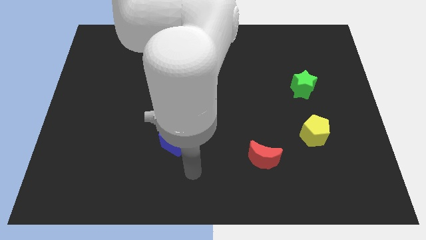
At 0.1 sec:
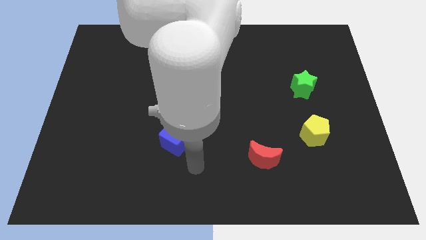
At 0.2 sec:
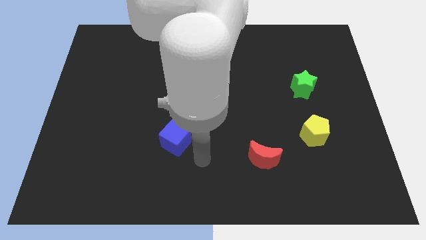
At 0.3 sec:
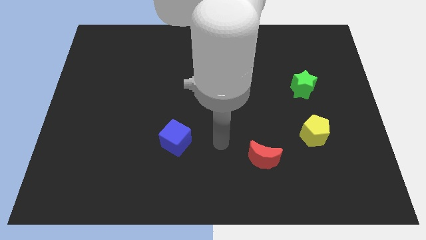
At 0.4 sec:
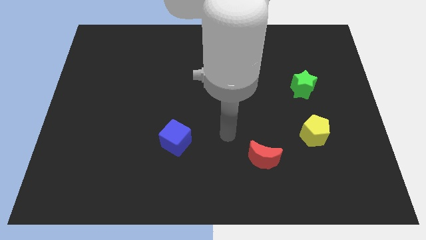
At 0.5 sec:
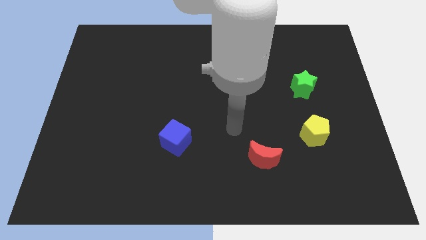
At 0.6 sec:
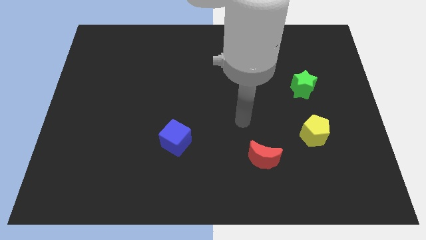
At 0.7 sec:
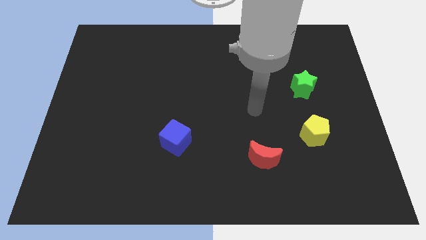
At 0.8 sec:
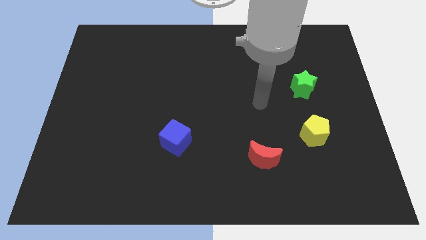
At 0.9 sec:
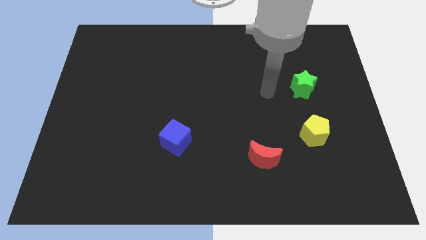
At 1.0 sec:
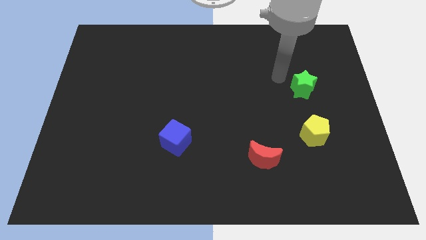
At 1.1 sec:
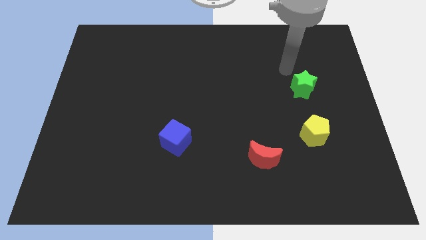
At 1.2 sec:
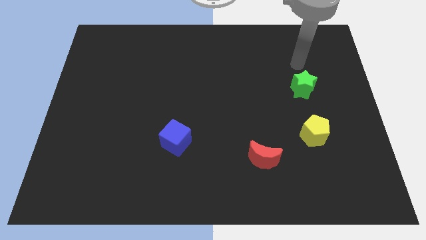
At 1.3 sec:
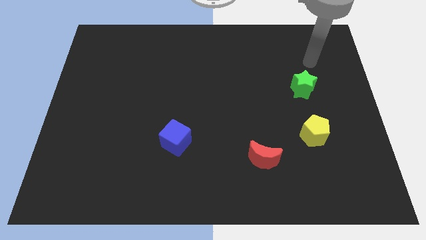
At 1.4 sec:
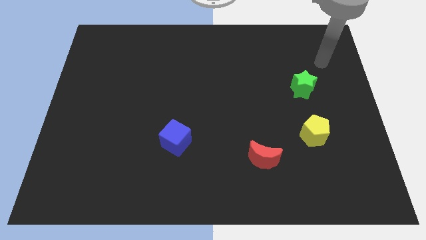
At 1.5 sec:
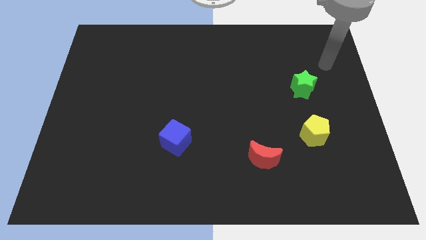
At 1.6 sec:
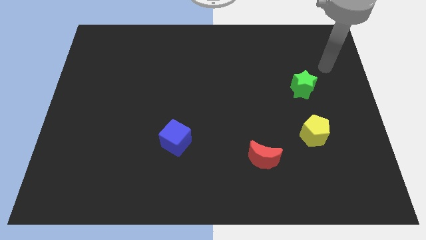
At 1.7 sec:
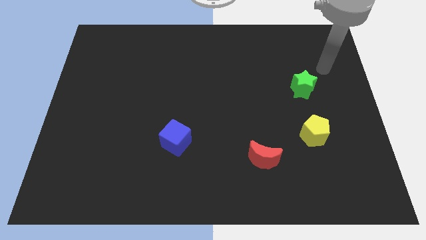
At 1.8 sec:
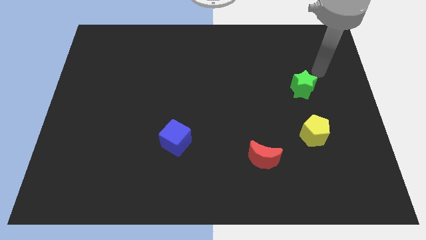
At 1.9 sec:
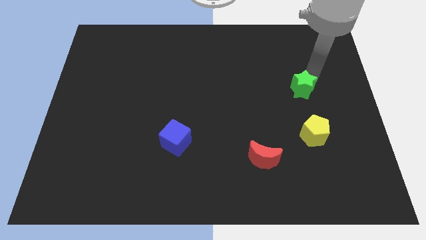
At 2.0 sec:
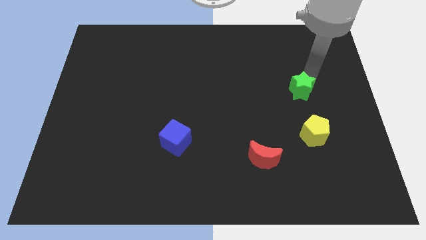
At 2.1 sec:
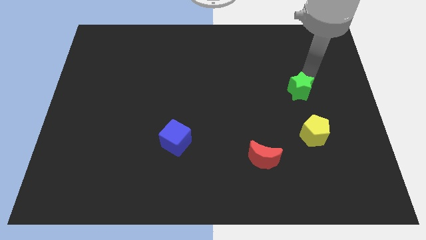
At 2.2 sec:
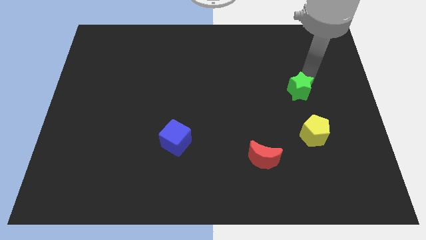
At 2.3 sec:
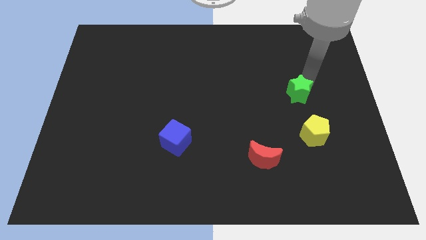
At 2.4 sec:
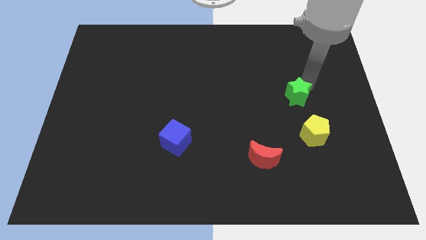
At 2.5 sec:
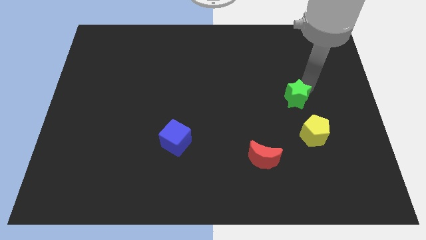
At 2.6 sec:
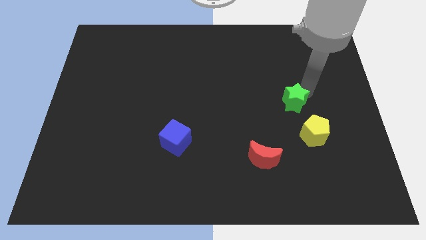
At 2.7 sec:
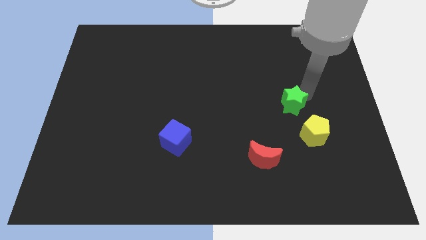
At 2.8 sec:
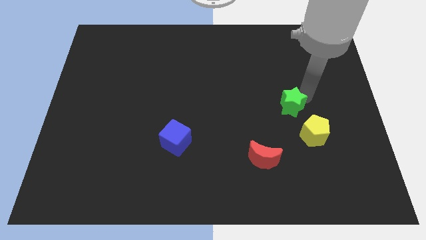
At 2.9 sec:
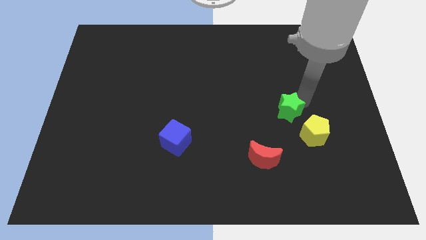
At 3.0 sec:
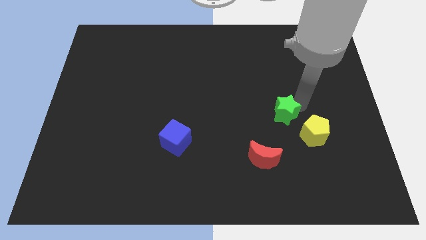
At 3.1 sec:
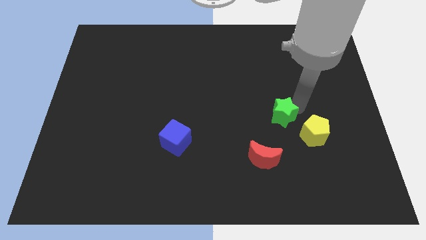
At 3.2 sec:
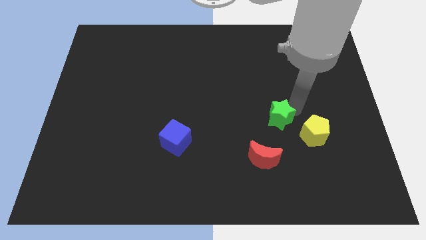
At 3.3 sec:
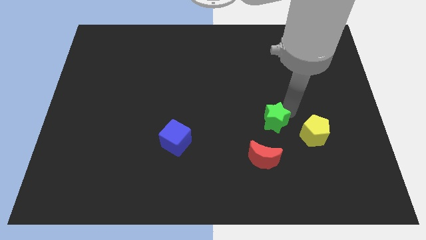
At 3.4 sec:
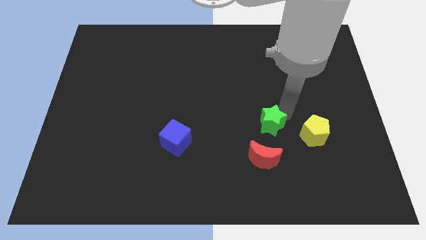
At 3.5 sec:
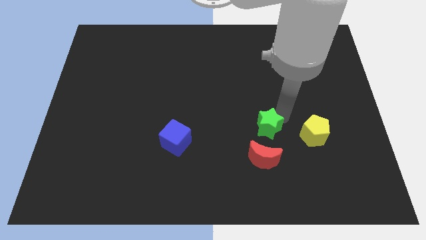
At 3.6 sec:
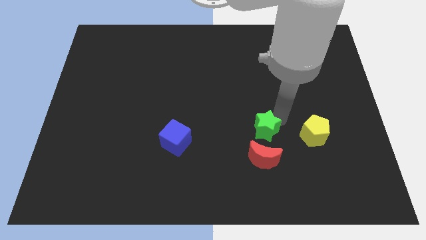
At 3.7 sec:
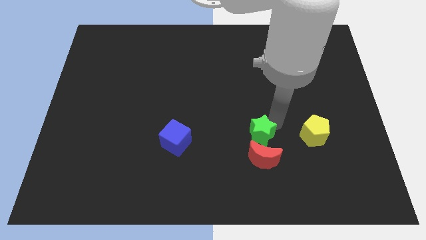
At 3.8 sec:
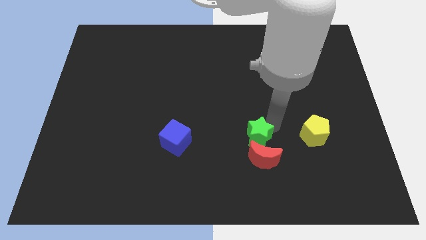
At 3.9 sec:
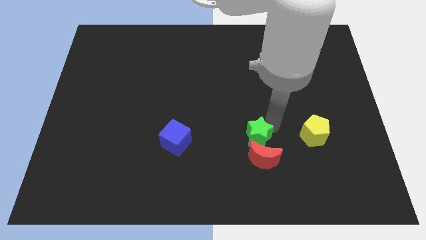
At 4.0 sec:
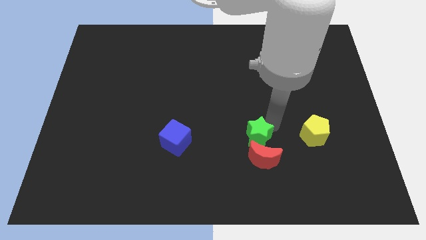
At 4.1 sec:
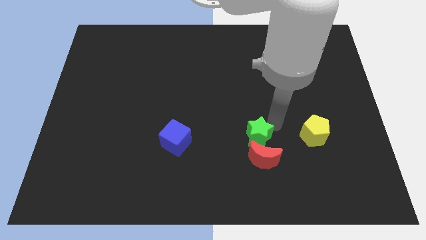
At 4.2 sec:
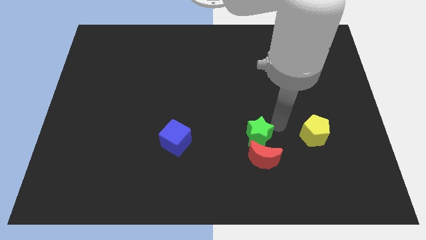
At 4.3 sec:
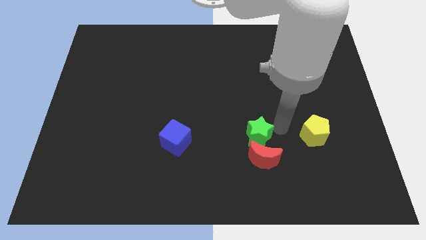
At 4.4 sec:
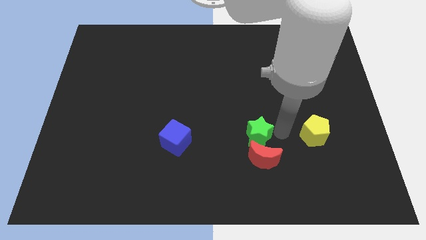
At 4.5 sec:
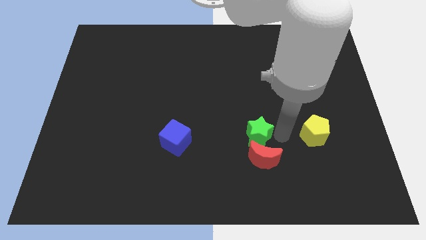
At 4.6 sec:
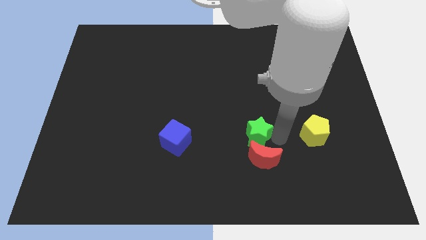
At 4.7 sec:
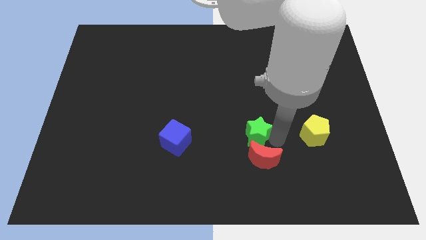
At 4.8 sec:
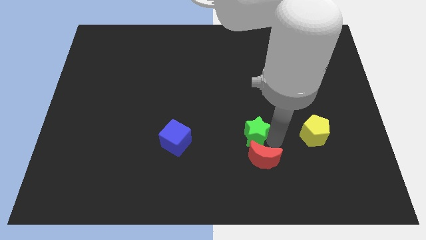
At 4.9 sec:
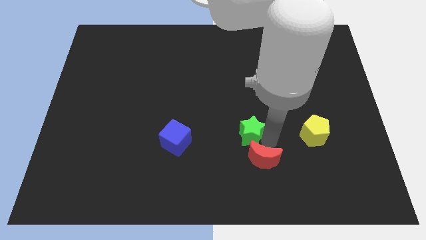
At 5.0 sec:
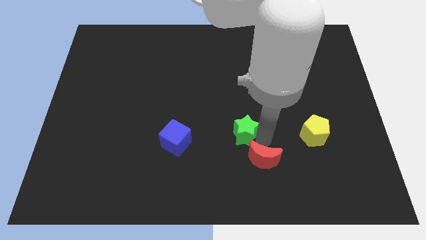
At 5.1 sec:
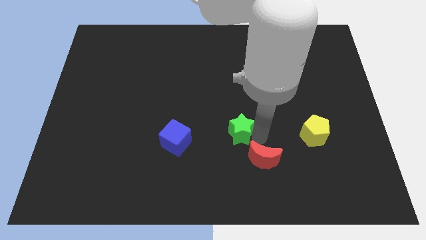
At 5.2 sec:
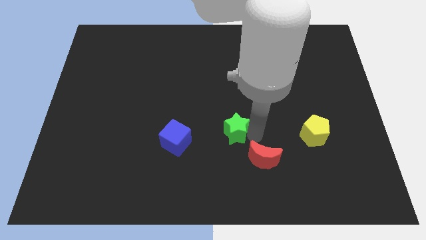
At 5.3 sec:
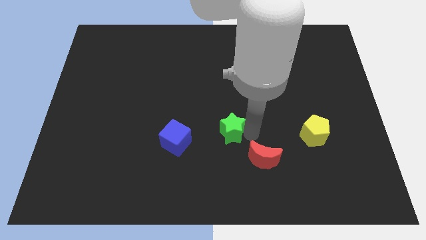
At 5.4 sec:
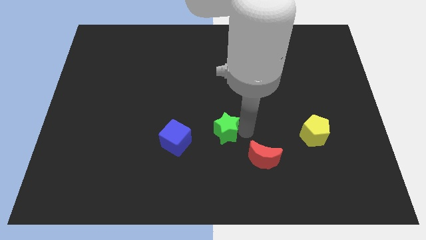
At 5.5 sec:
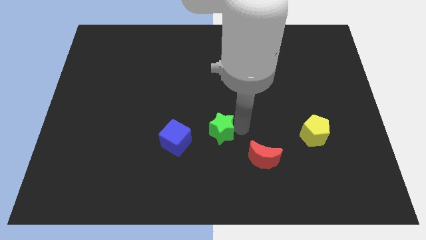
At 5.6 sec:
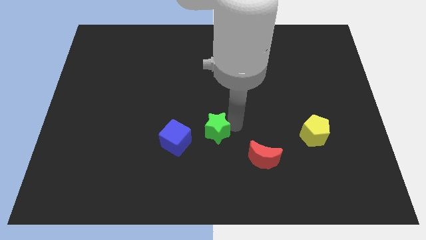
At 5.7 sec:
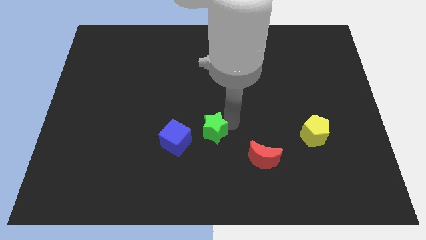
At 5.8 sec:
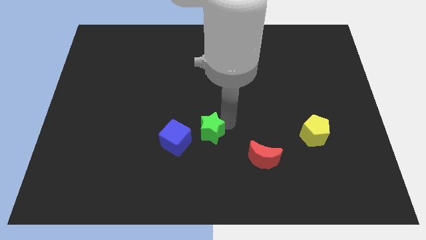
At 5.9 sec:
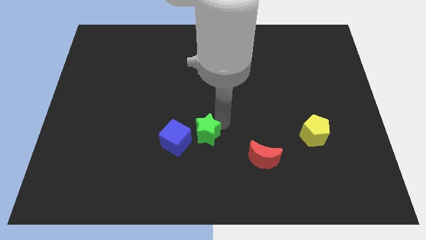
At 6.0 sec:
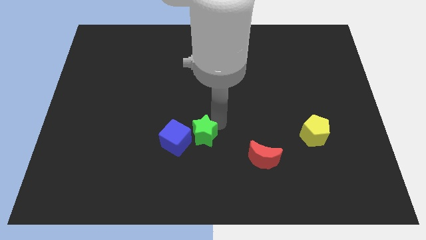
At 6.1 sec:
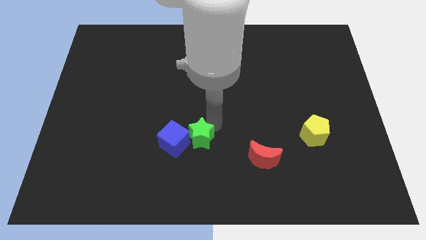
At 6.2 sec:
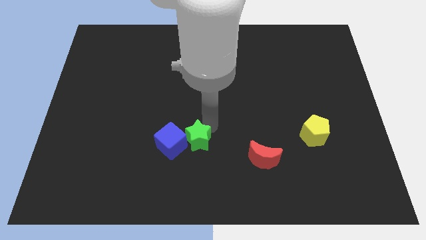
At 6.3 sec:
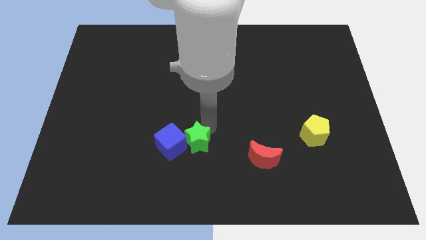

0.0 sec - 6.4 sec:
move the green star towards the cube

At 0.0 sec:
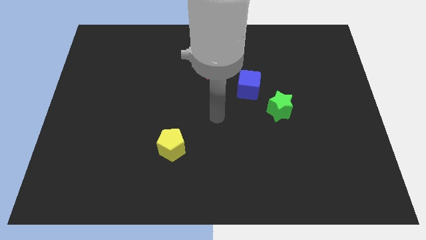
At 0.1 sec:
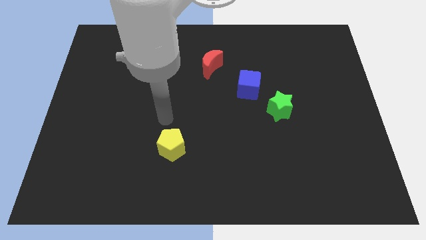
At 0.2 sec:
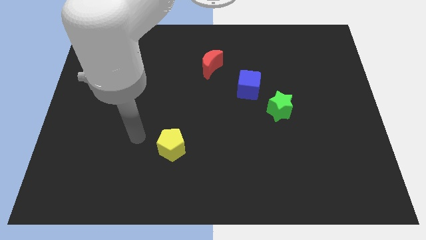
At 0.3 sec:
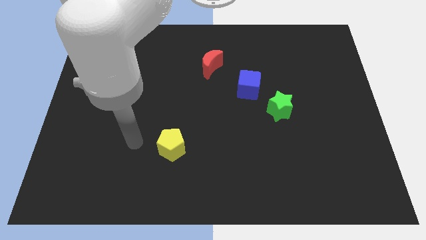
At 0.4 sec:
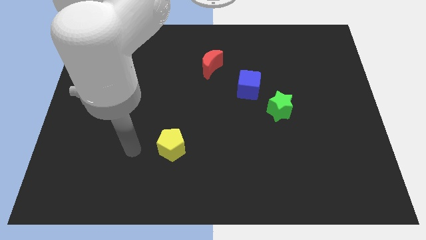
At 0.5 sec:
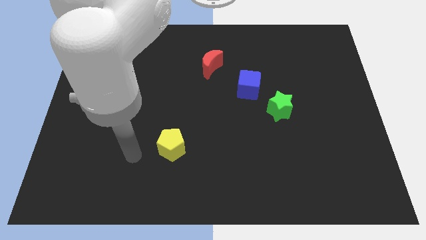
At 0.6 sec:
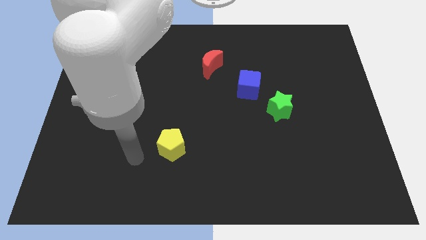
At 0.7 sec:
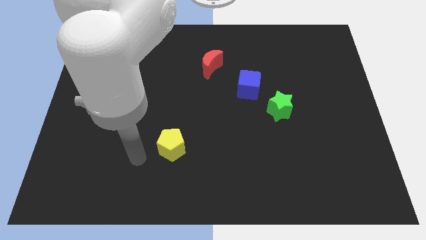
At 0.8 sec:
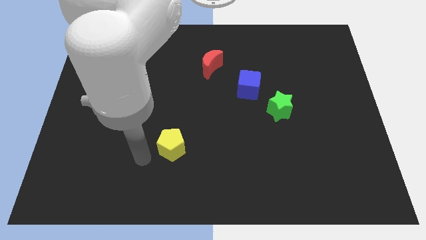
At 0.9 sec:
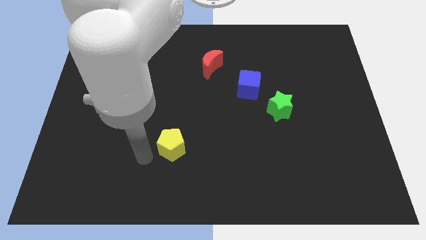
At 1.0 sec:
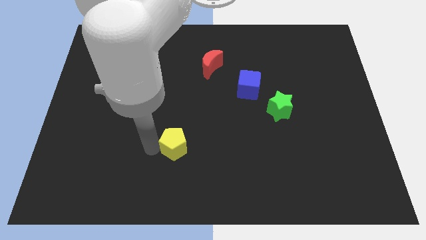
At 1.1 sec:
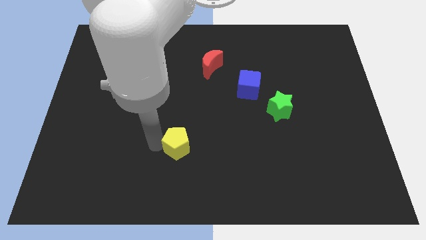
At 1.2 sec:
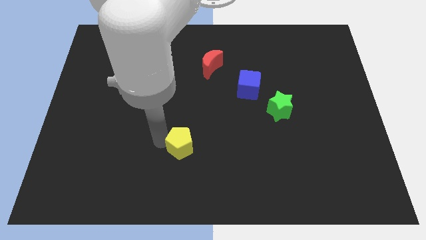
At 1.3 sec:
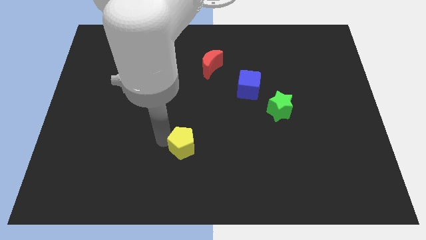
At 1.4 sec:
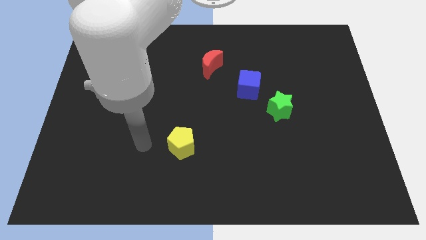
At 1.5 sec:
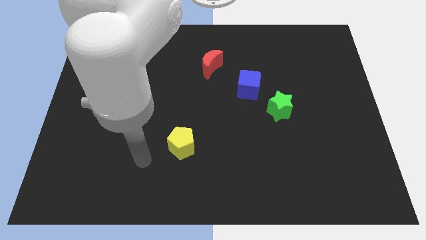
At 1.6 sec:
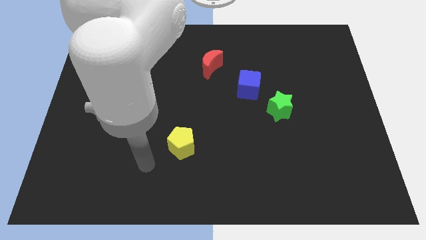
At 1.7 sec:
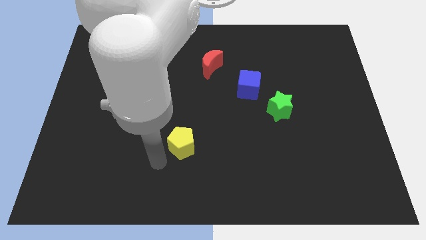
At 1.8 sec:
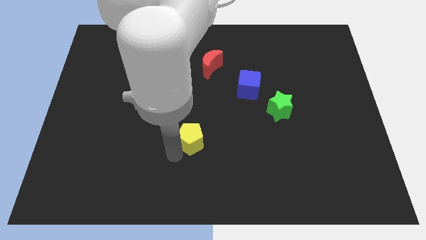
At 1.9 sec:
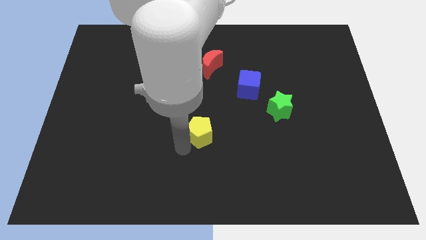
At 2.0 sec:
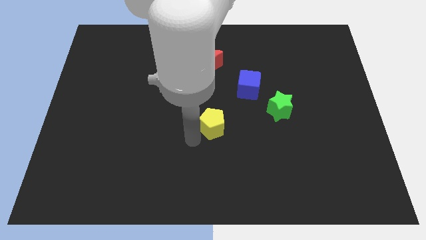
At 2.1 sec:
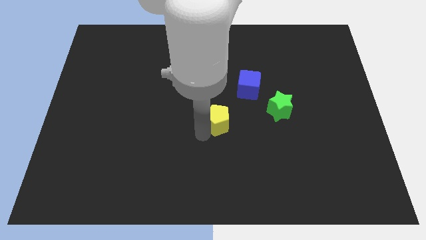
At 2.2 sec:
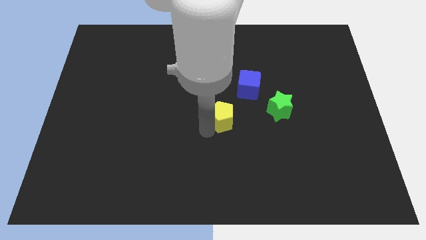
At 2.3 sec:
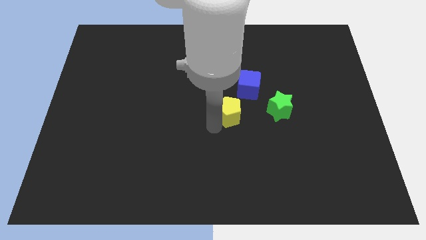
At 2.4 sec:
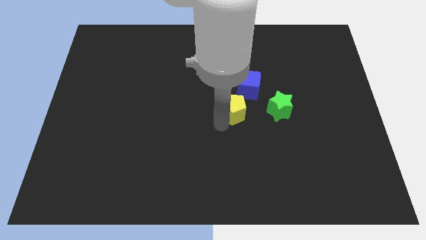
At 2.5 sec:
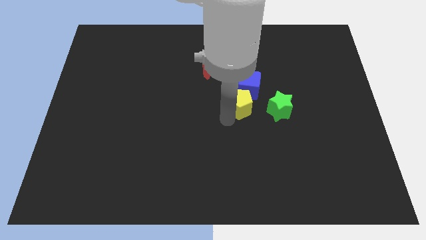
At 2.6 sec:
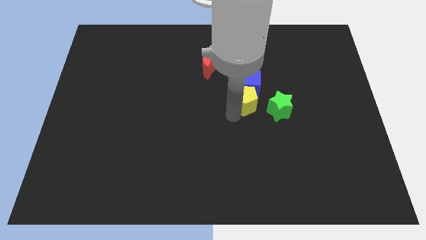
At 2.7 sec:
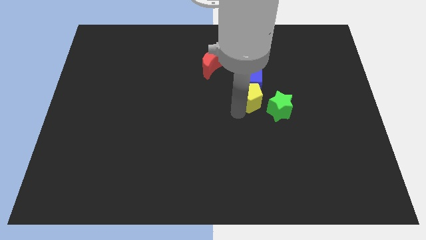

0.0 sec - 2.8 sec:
slide the pentagon towards the cube
